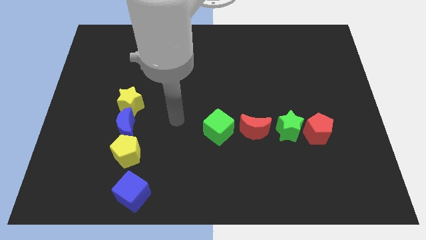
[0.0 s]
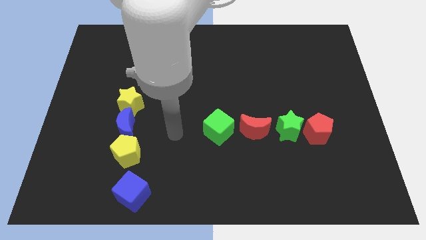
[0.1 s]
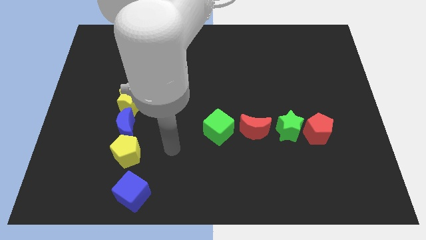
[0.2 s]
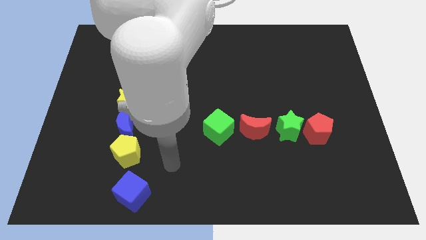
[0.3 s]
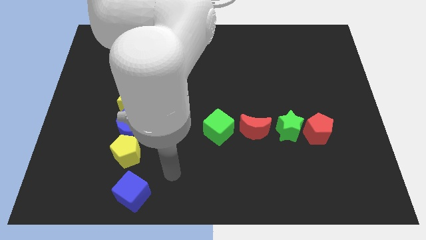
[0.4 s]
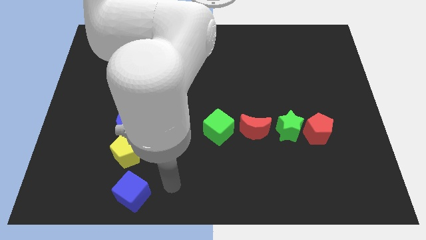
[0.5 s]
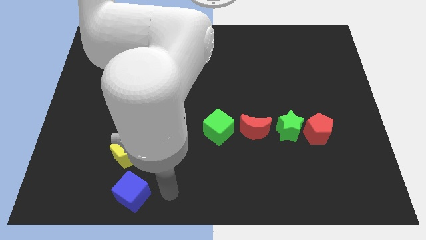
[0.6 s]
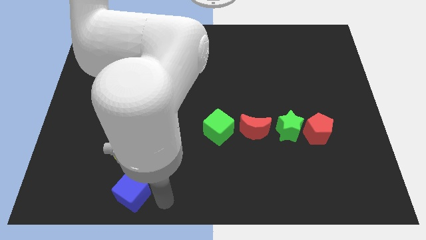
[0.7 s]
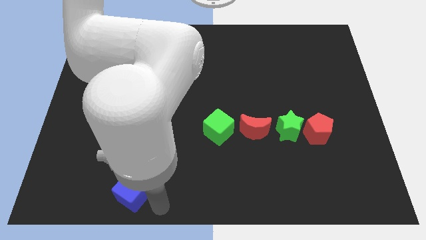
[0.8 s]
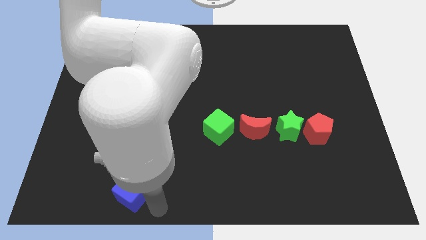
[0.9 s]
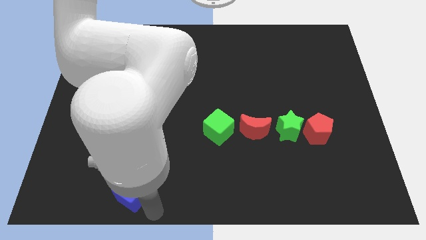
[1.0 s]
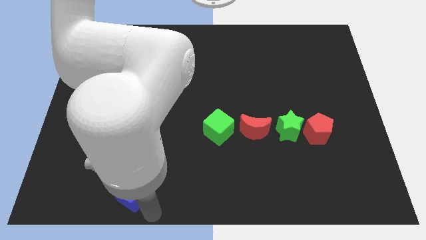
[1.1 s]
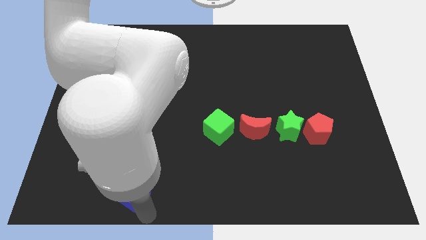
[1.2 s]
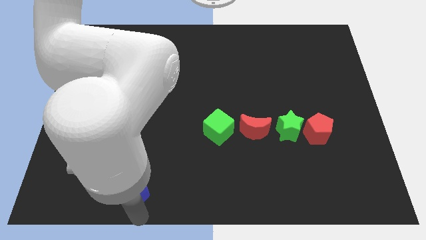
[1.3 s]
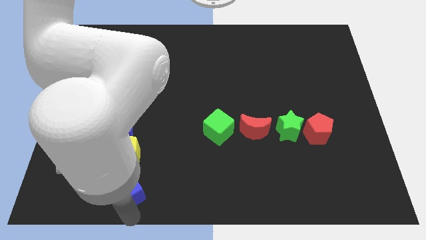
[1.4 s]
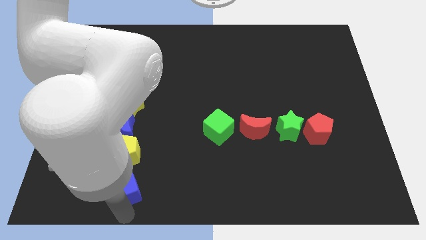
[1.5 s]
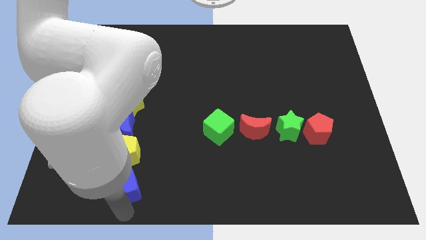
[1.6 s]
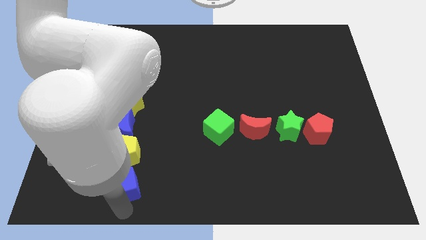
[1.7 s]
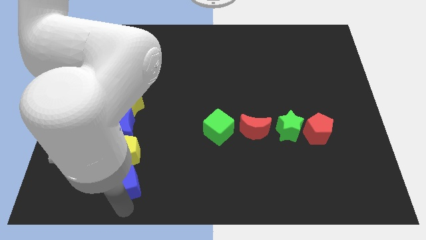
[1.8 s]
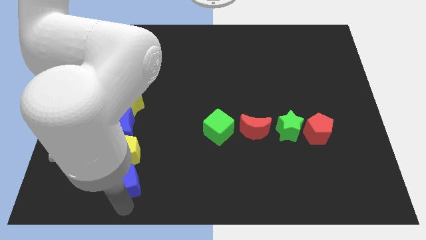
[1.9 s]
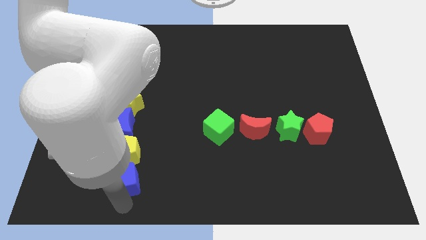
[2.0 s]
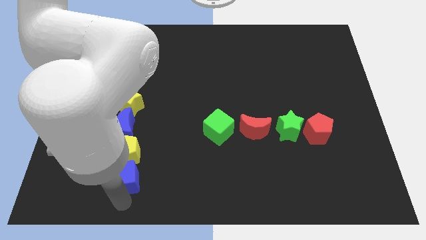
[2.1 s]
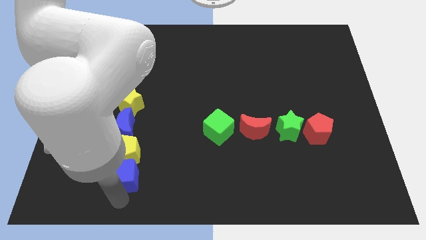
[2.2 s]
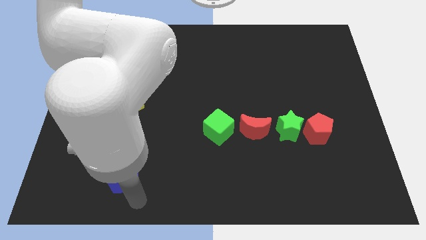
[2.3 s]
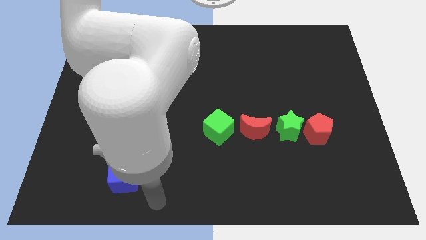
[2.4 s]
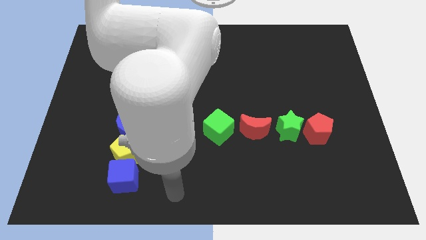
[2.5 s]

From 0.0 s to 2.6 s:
push the blue cube close to the yellow pentagon

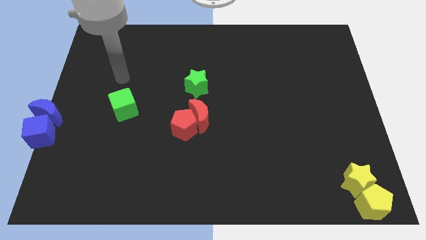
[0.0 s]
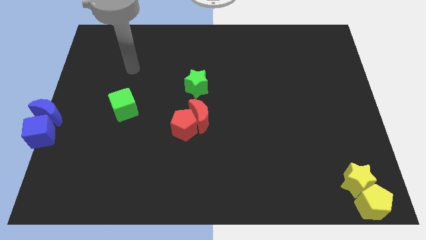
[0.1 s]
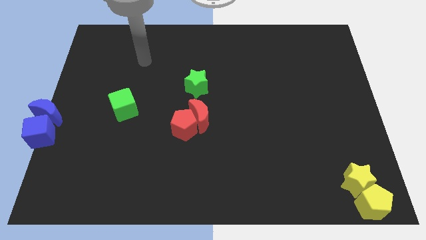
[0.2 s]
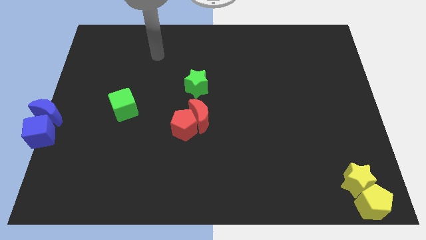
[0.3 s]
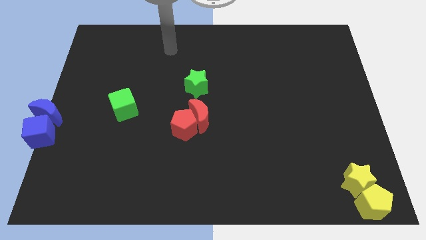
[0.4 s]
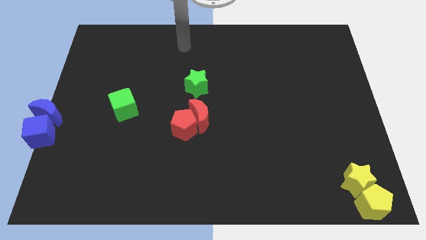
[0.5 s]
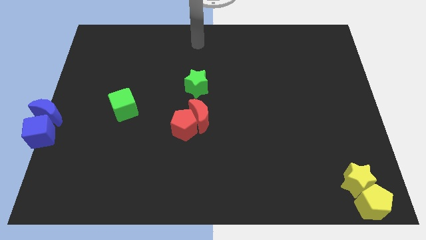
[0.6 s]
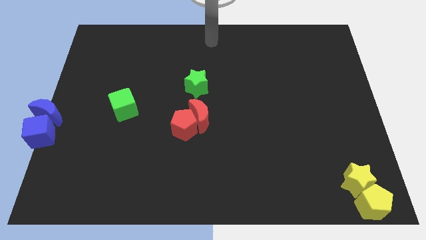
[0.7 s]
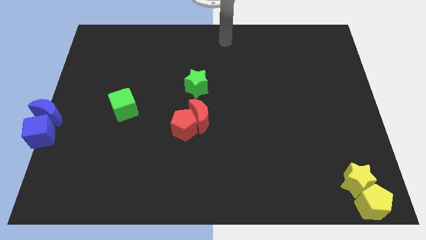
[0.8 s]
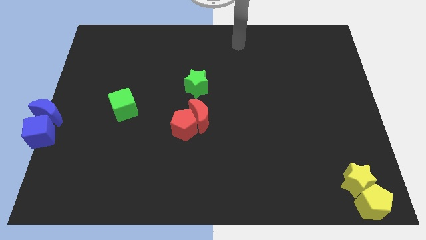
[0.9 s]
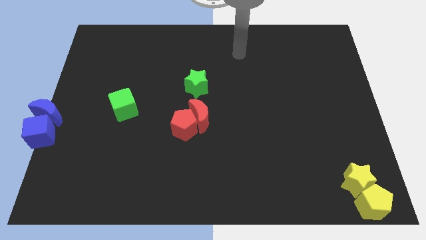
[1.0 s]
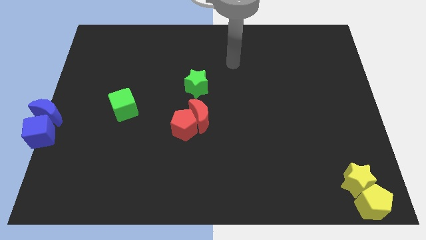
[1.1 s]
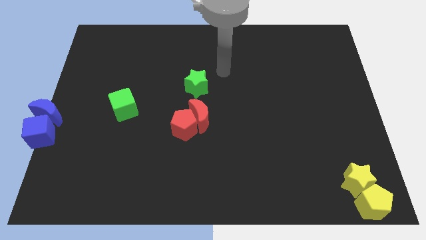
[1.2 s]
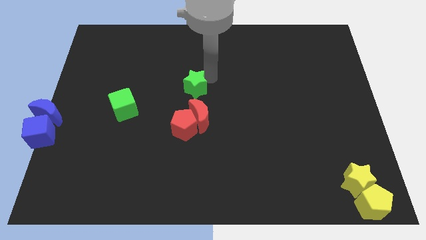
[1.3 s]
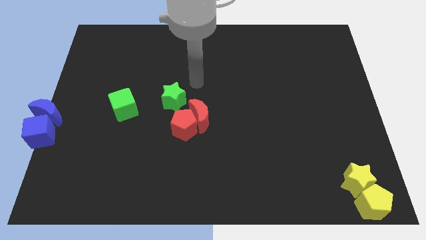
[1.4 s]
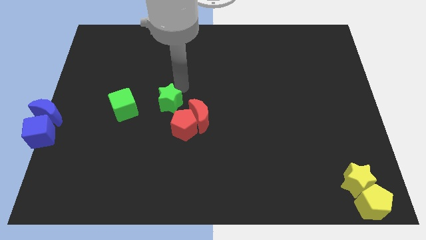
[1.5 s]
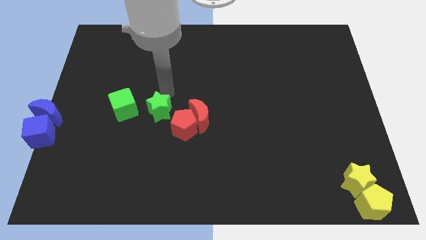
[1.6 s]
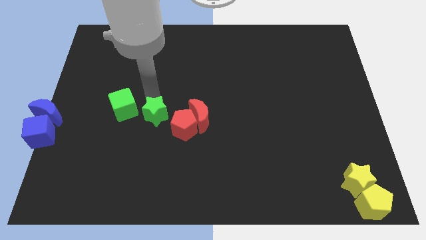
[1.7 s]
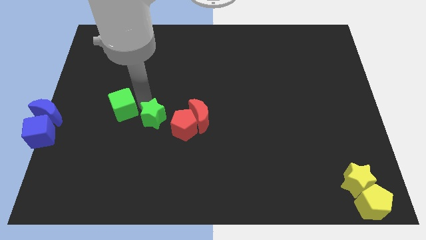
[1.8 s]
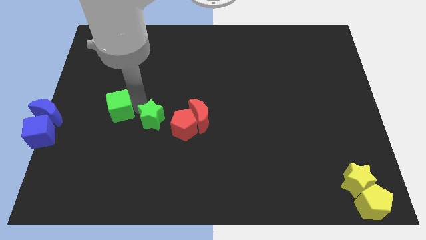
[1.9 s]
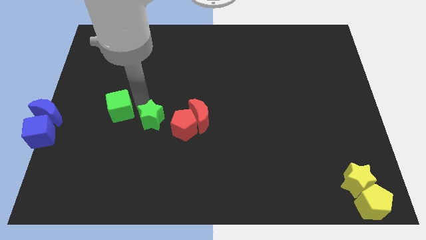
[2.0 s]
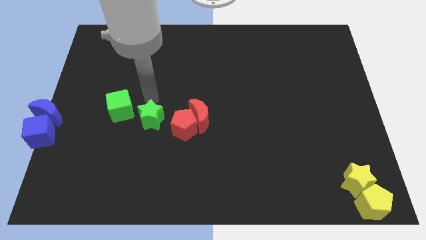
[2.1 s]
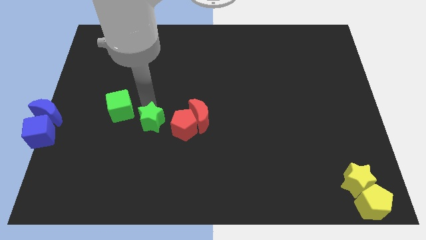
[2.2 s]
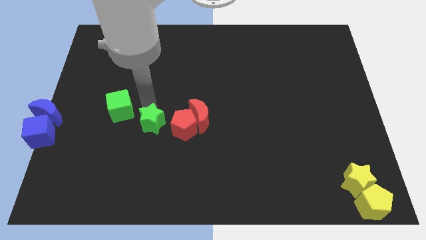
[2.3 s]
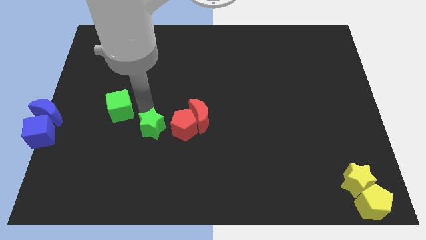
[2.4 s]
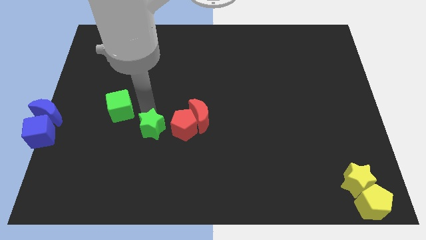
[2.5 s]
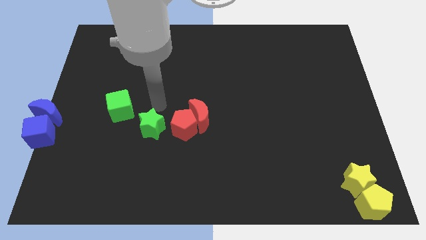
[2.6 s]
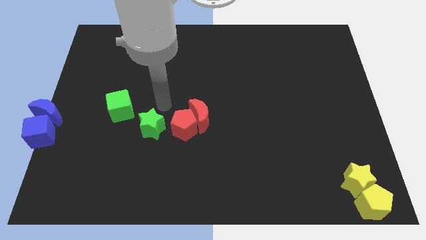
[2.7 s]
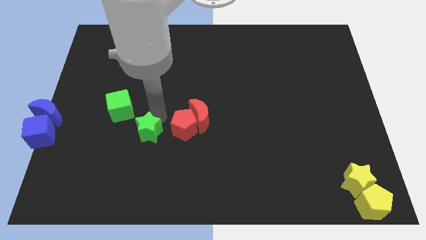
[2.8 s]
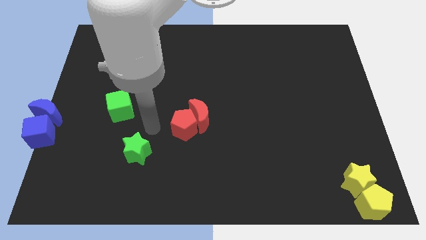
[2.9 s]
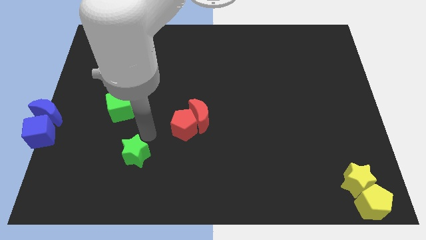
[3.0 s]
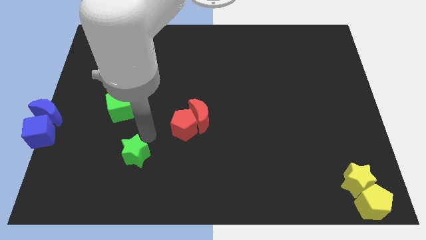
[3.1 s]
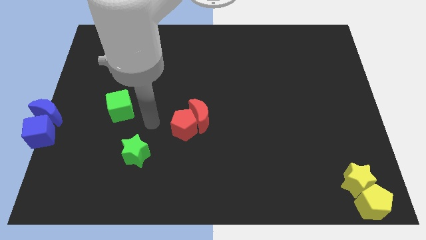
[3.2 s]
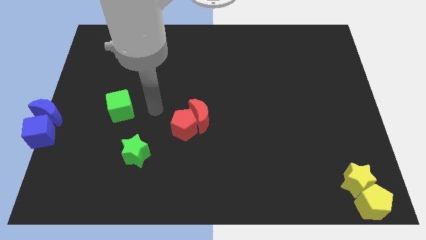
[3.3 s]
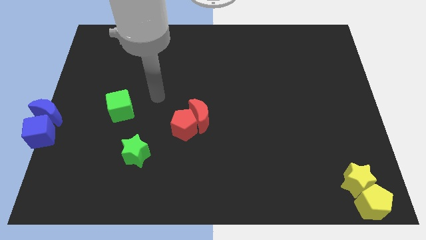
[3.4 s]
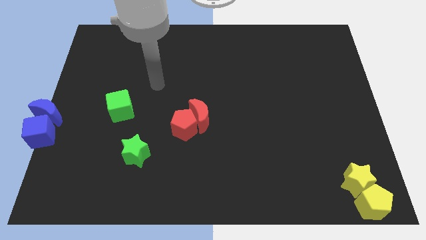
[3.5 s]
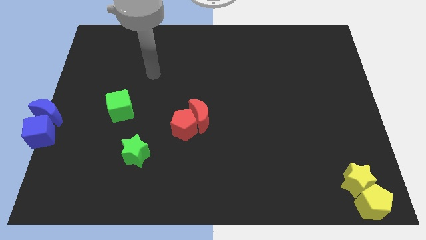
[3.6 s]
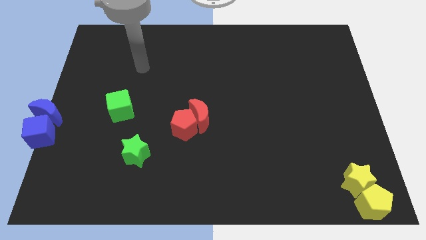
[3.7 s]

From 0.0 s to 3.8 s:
move the green star diagonal below green cube

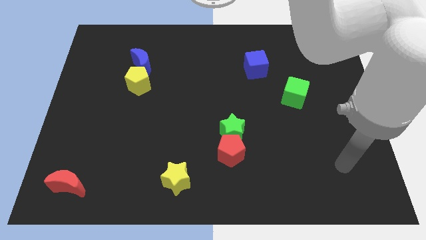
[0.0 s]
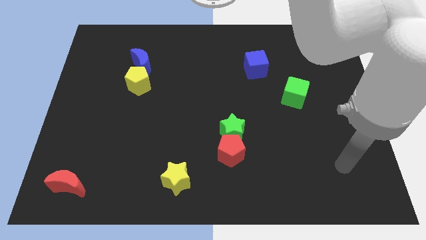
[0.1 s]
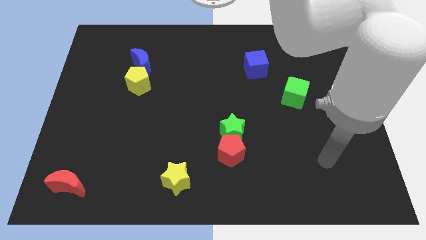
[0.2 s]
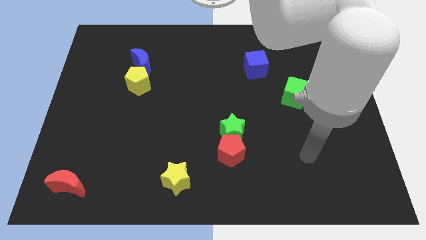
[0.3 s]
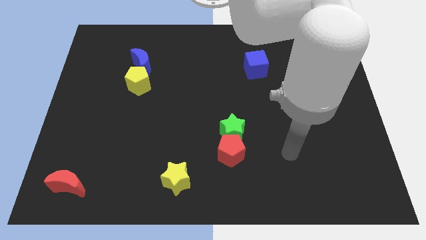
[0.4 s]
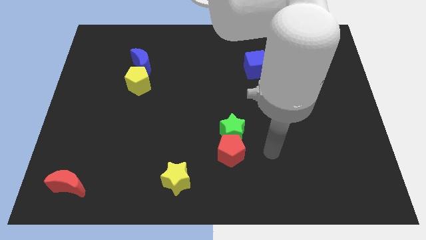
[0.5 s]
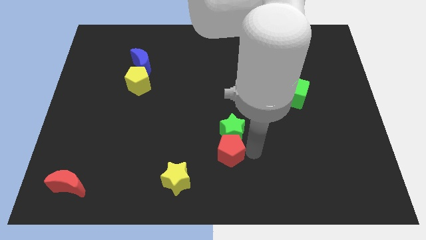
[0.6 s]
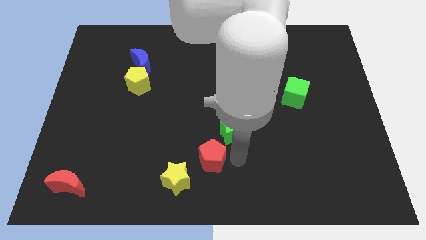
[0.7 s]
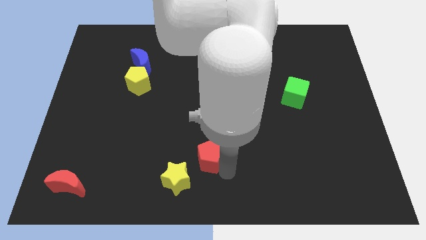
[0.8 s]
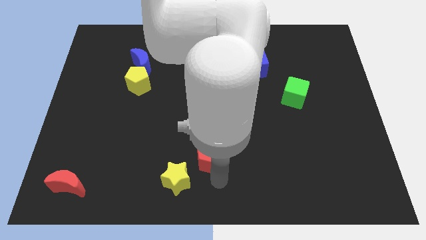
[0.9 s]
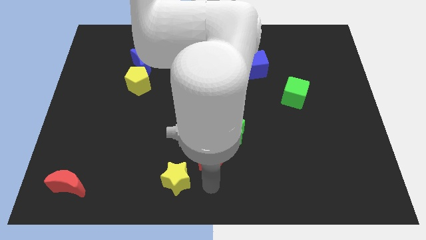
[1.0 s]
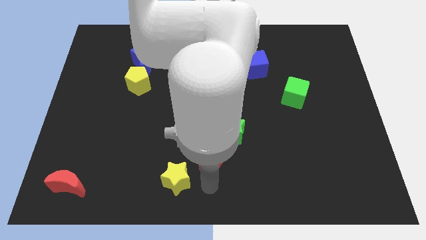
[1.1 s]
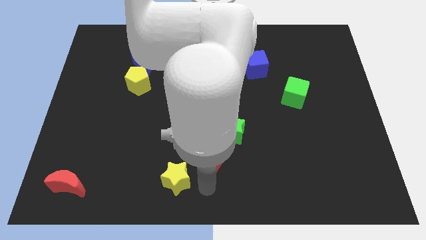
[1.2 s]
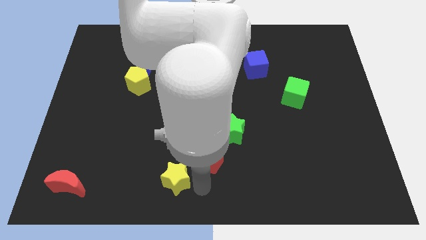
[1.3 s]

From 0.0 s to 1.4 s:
move the red pentagon towards yellow star

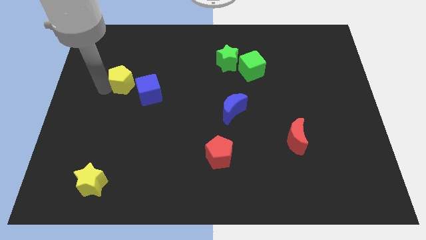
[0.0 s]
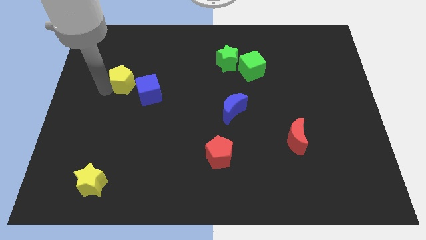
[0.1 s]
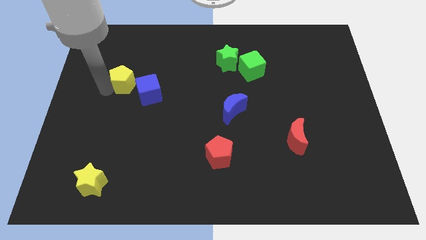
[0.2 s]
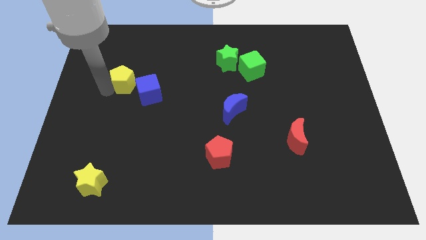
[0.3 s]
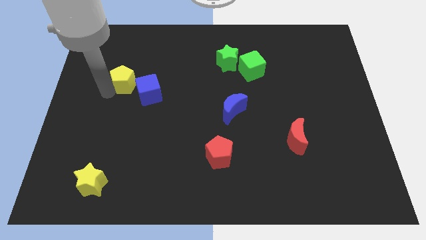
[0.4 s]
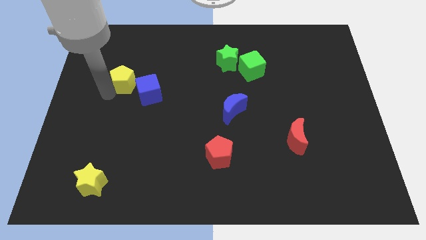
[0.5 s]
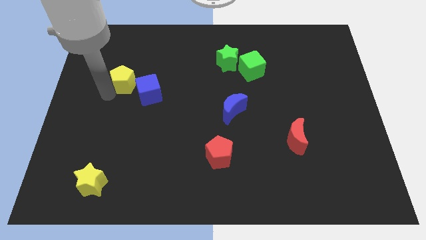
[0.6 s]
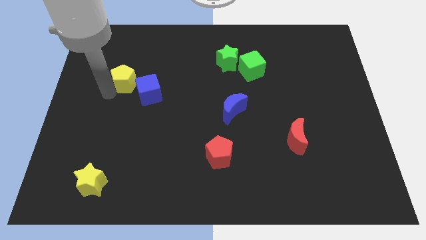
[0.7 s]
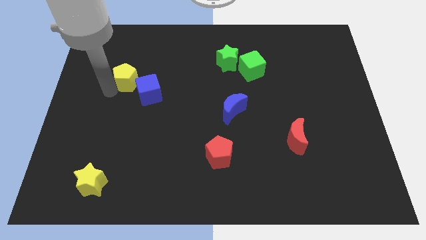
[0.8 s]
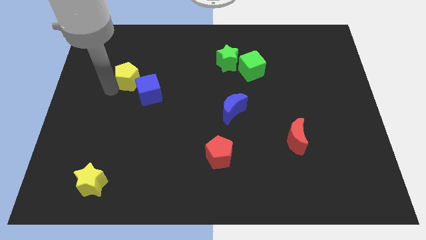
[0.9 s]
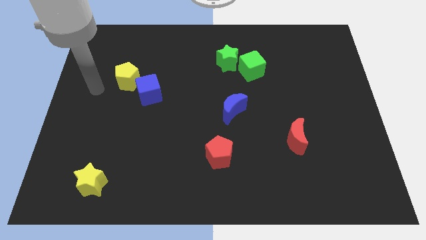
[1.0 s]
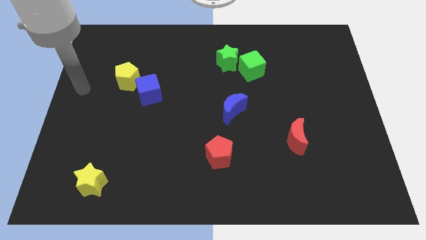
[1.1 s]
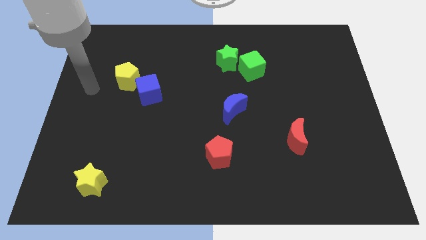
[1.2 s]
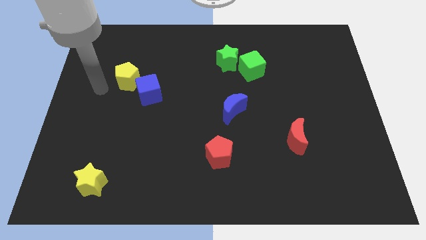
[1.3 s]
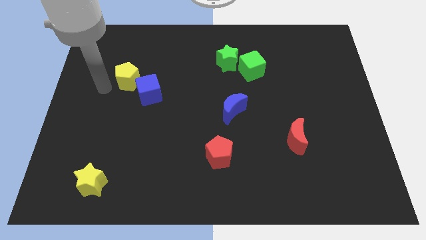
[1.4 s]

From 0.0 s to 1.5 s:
push the yellow pentagon diagonally to the close top left of the blue cube
